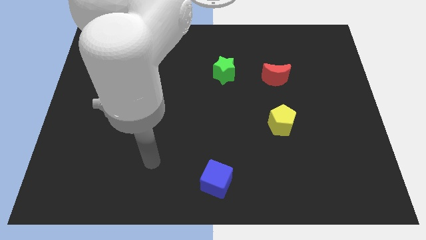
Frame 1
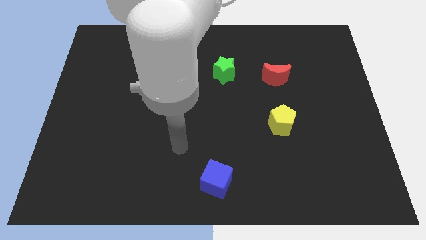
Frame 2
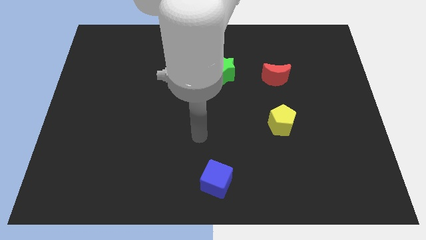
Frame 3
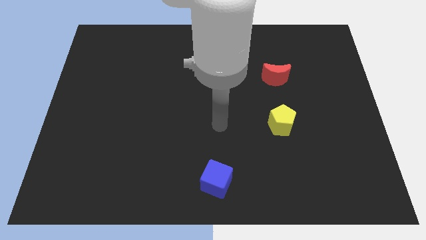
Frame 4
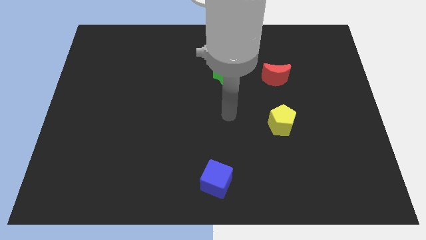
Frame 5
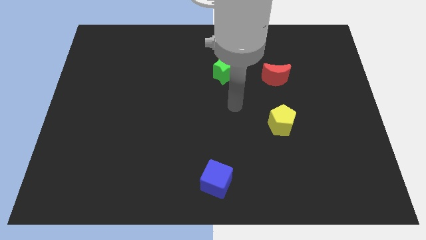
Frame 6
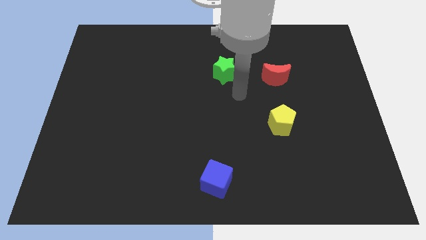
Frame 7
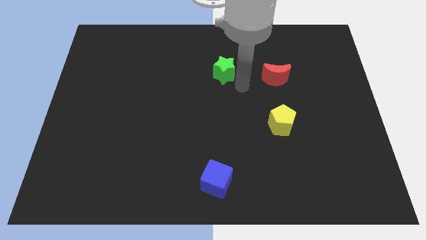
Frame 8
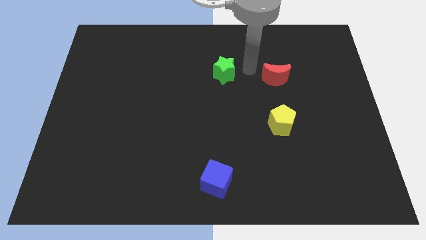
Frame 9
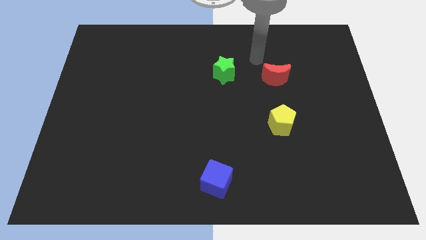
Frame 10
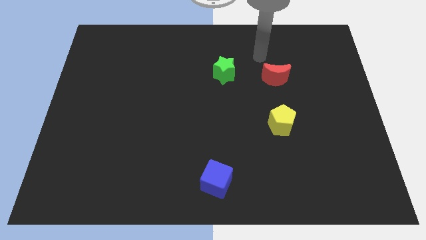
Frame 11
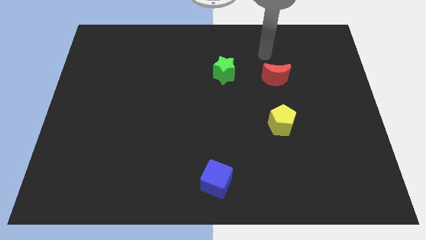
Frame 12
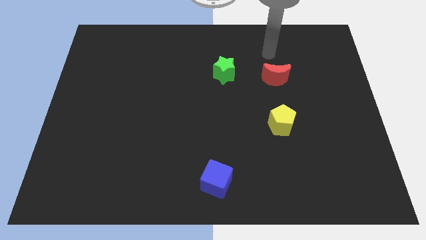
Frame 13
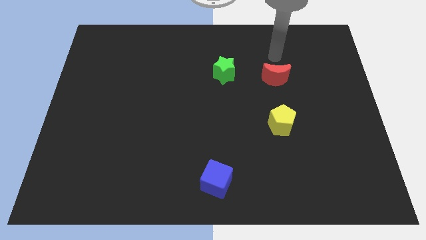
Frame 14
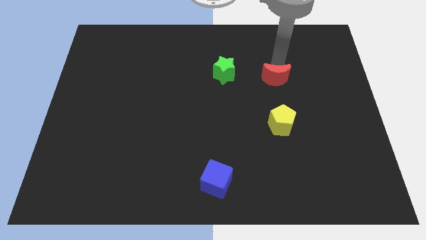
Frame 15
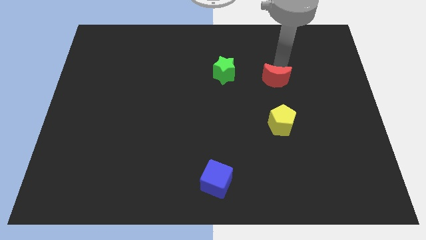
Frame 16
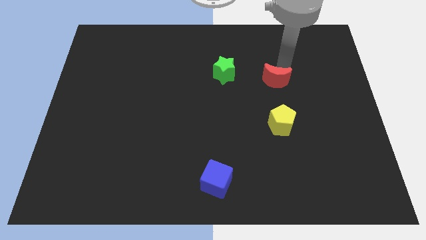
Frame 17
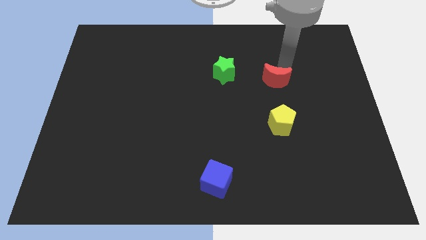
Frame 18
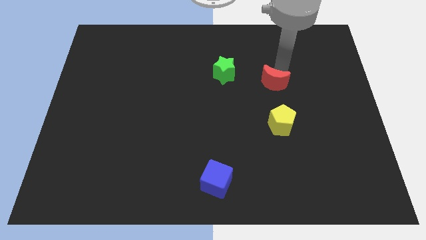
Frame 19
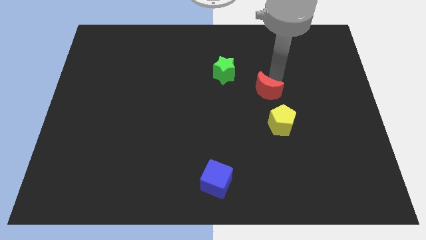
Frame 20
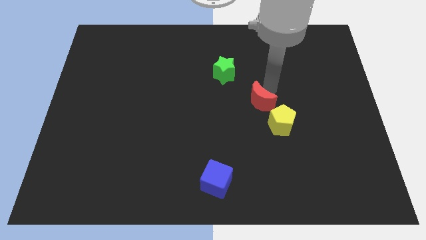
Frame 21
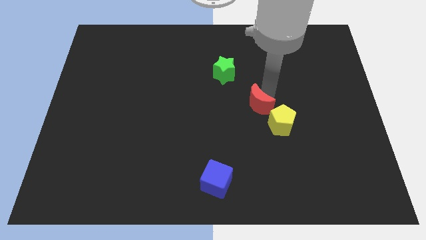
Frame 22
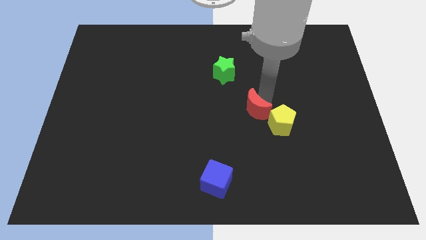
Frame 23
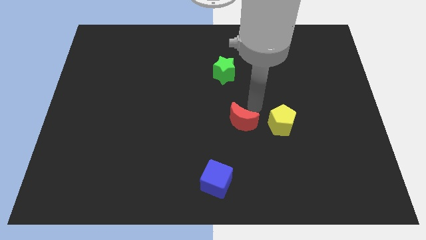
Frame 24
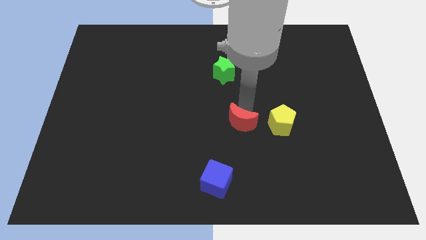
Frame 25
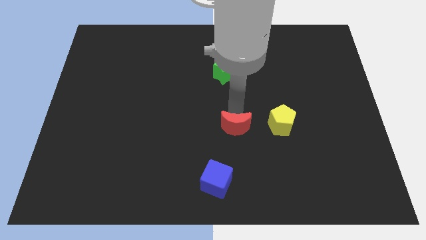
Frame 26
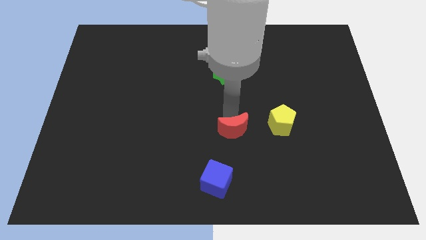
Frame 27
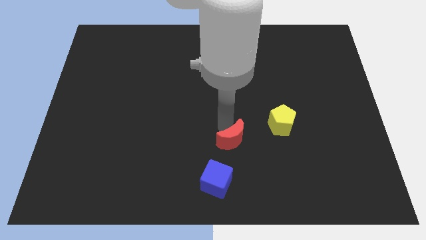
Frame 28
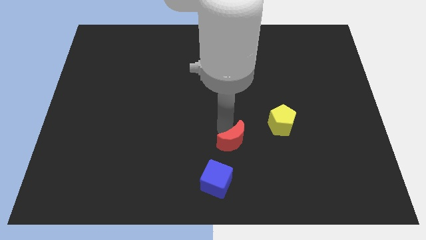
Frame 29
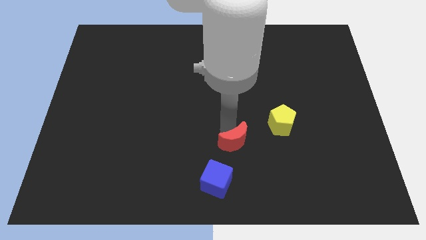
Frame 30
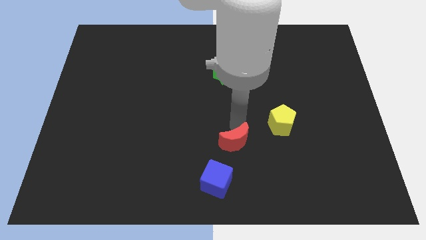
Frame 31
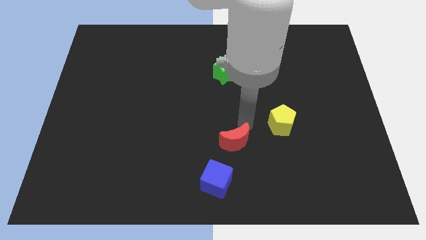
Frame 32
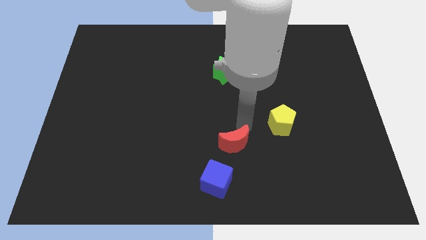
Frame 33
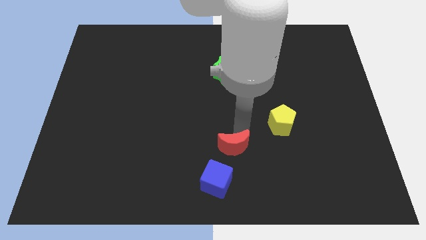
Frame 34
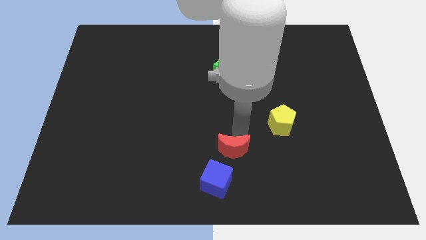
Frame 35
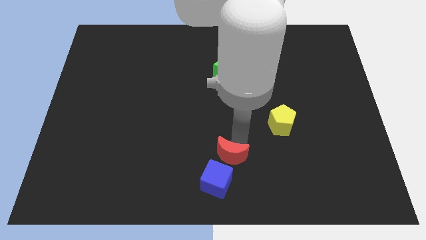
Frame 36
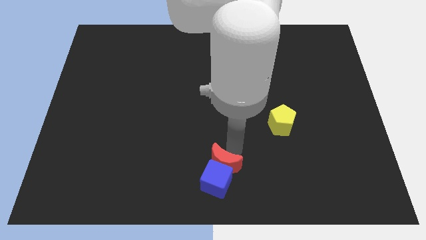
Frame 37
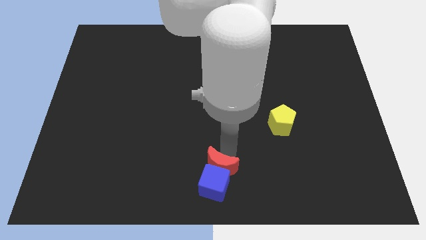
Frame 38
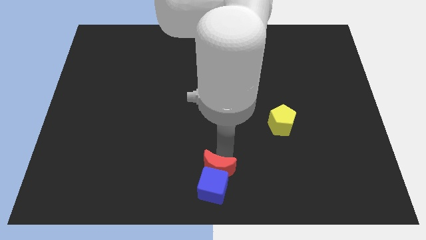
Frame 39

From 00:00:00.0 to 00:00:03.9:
push the moon close to the blue block

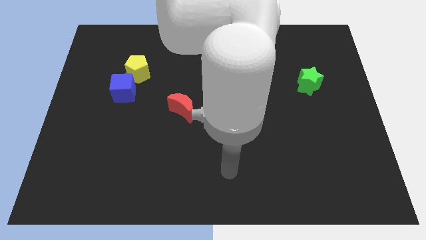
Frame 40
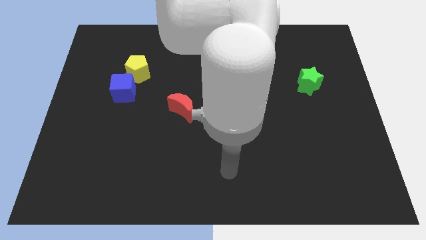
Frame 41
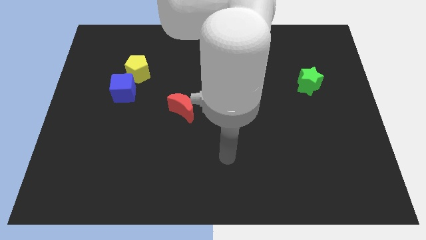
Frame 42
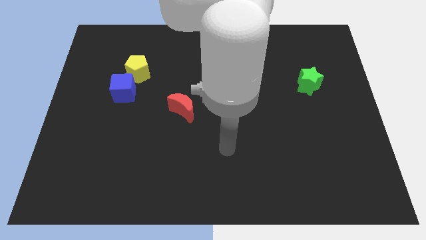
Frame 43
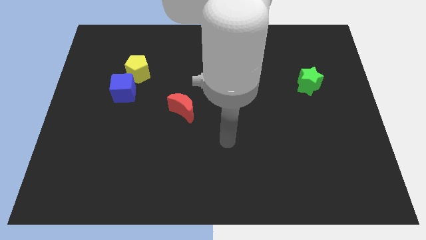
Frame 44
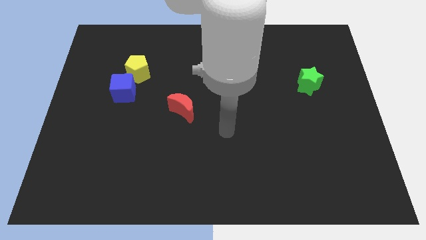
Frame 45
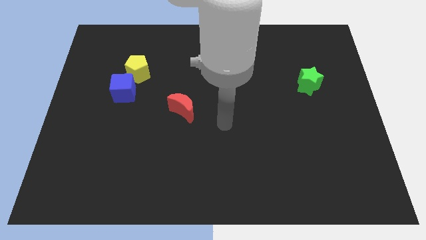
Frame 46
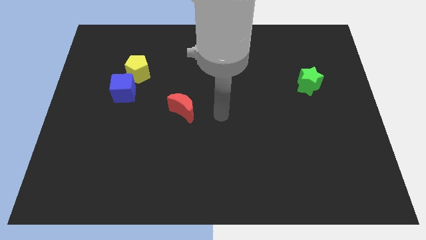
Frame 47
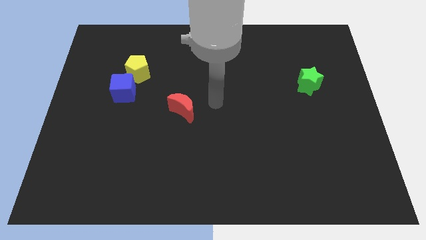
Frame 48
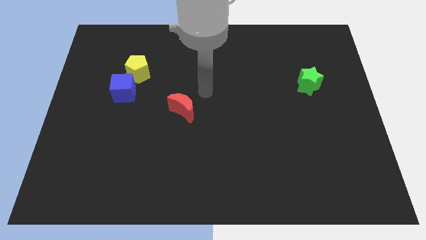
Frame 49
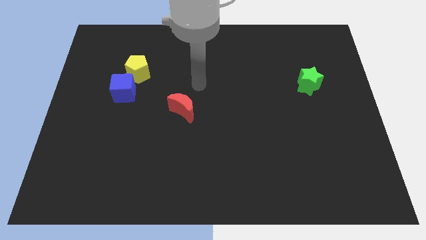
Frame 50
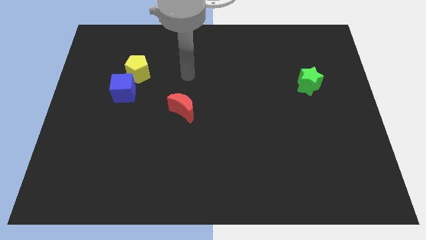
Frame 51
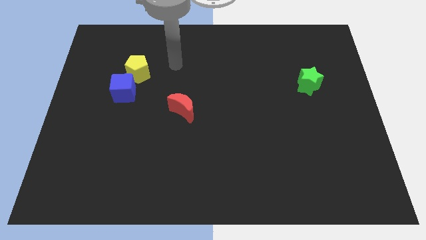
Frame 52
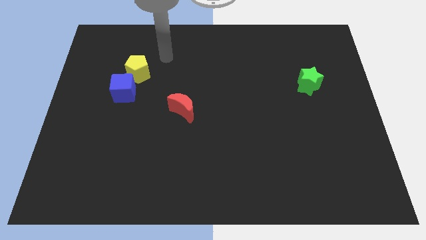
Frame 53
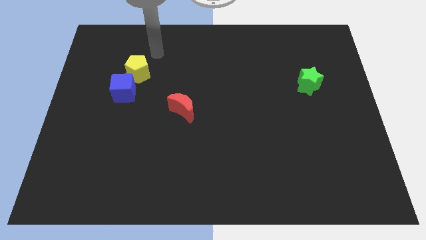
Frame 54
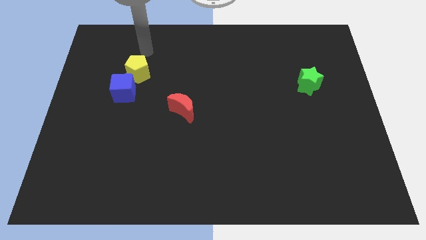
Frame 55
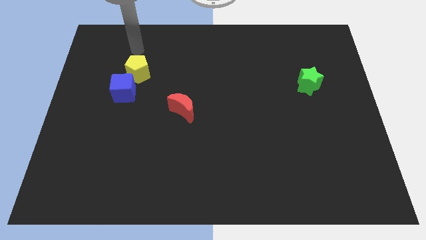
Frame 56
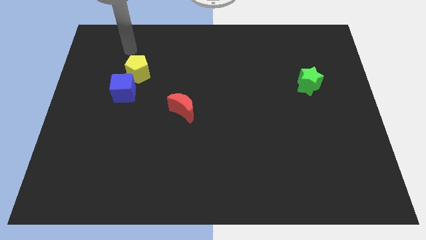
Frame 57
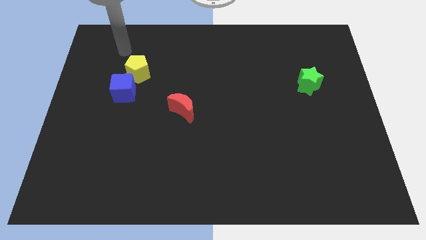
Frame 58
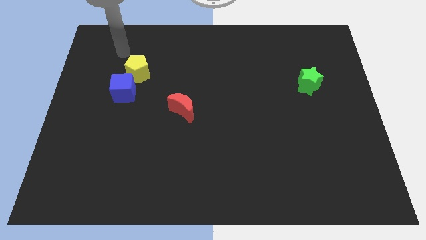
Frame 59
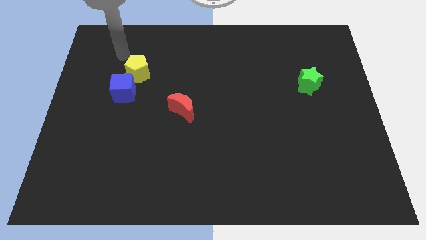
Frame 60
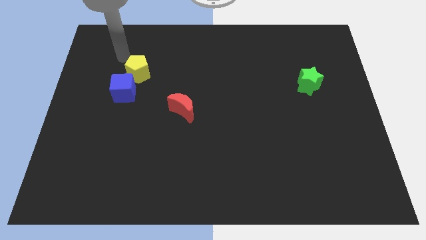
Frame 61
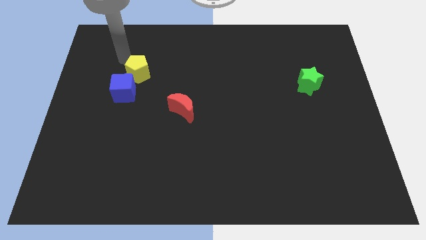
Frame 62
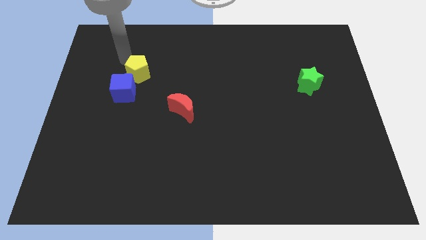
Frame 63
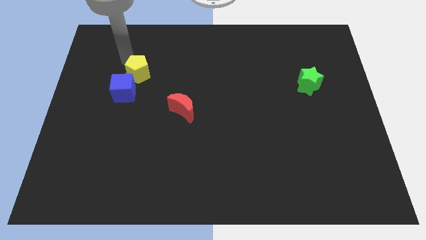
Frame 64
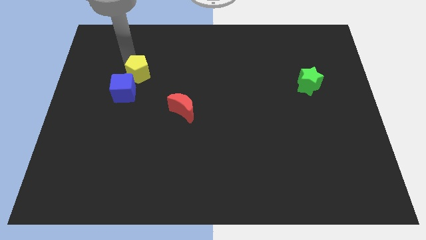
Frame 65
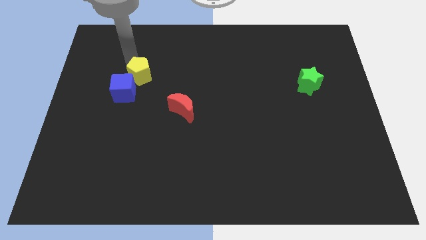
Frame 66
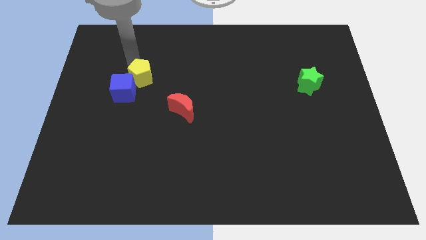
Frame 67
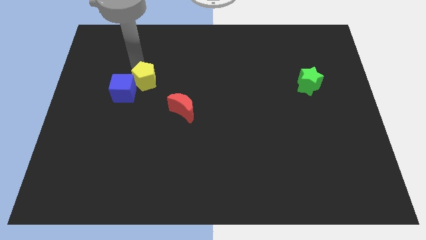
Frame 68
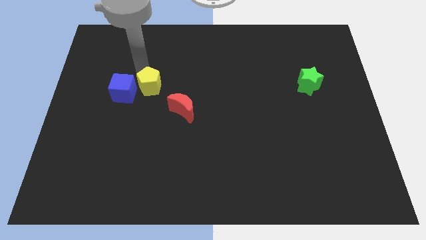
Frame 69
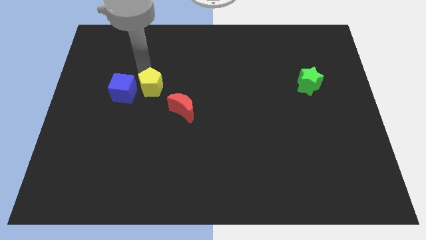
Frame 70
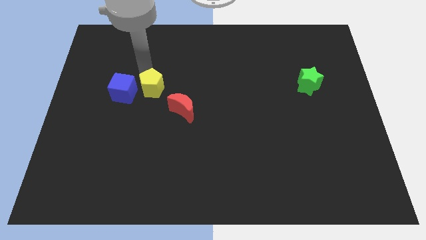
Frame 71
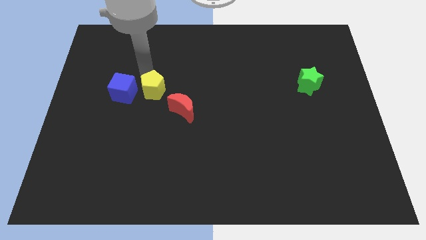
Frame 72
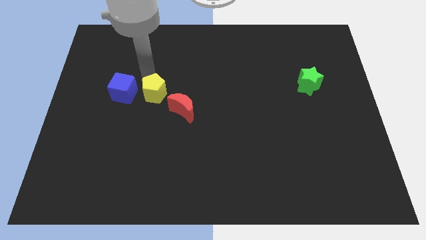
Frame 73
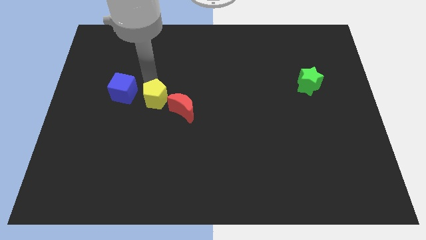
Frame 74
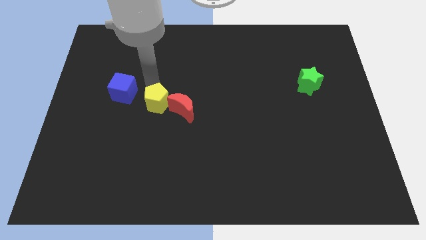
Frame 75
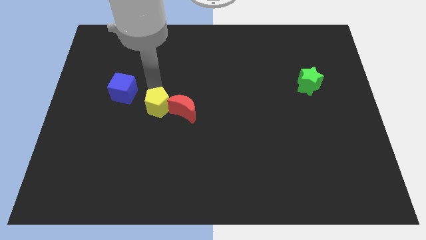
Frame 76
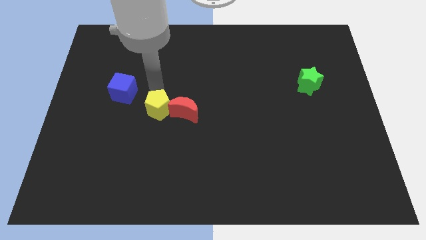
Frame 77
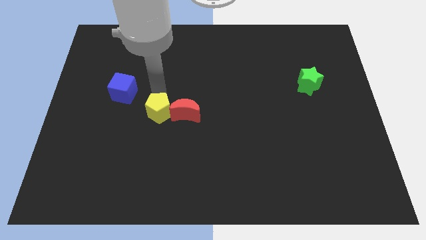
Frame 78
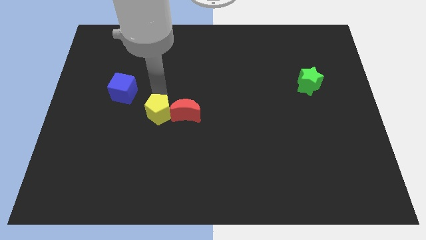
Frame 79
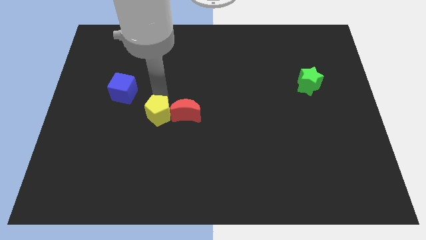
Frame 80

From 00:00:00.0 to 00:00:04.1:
move the yellow block close to the red moon
